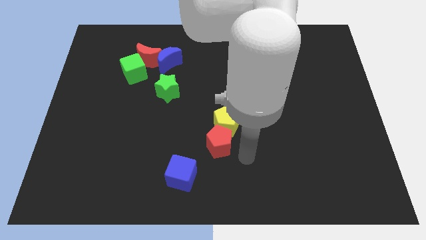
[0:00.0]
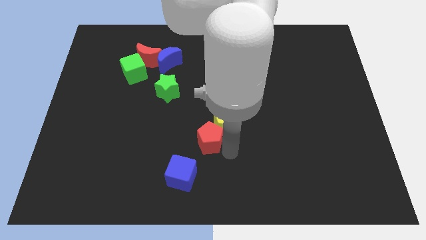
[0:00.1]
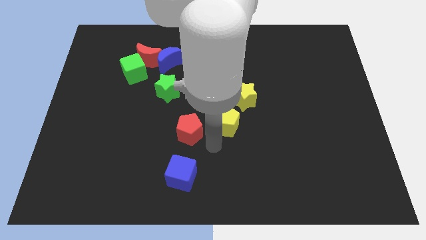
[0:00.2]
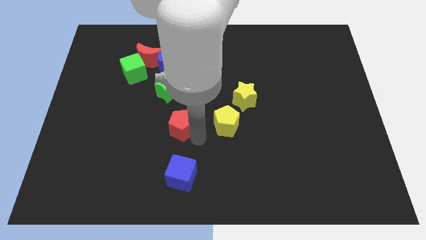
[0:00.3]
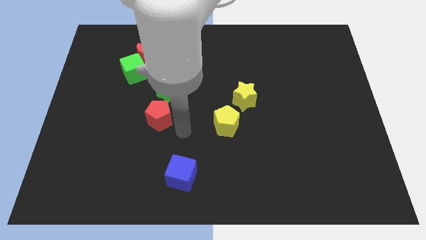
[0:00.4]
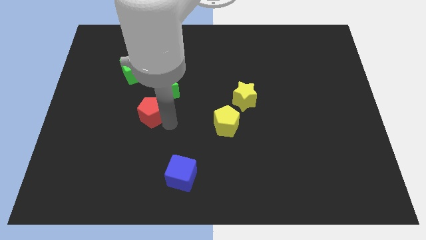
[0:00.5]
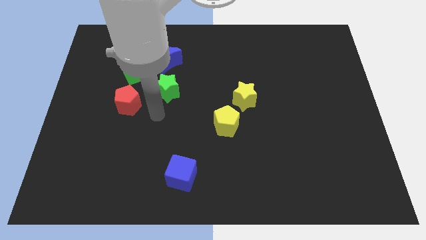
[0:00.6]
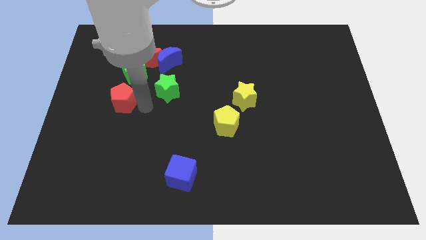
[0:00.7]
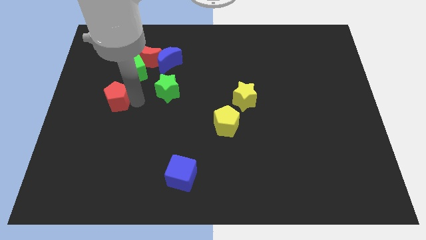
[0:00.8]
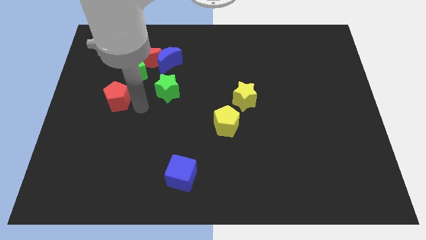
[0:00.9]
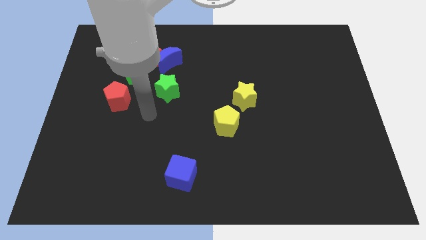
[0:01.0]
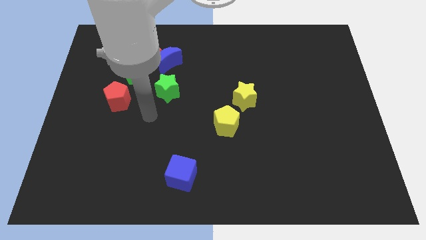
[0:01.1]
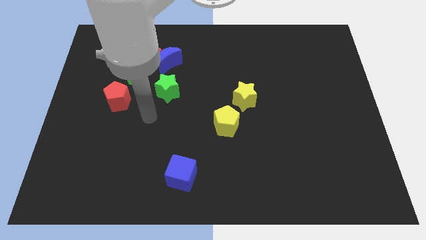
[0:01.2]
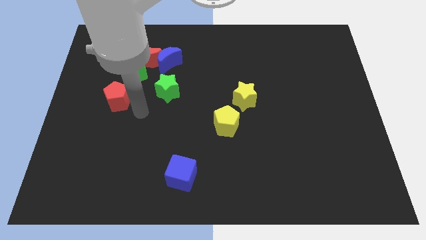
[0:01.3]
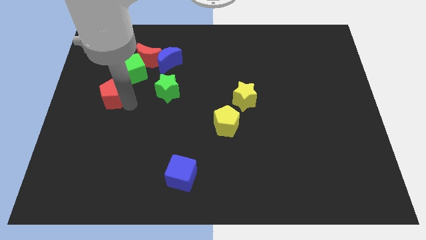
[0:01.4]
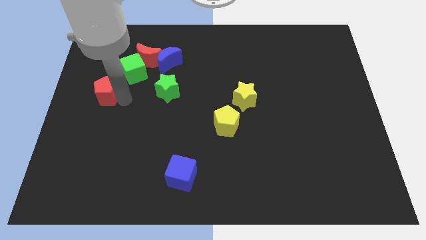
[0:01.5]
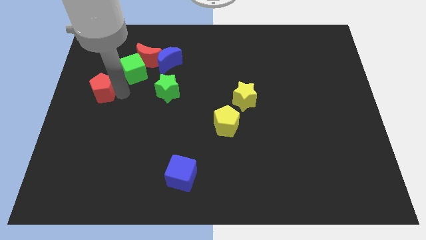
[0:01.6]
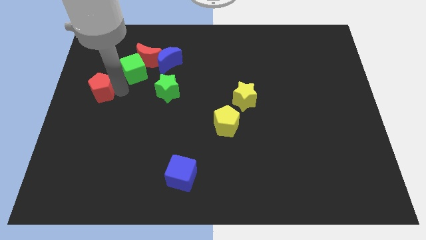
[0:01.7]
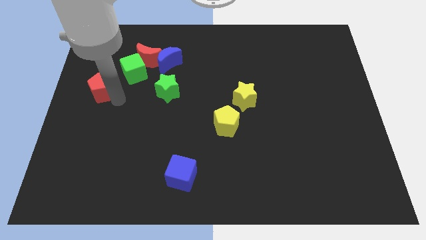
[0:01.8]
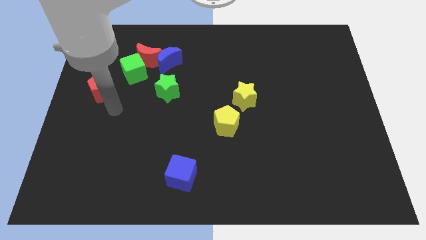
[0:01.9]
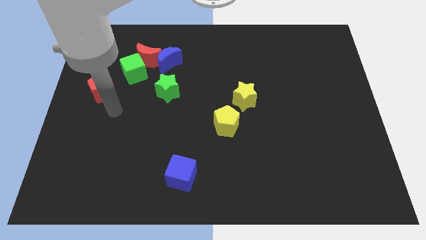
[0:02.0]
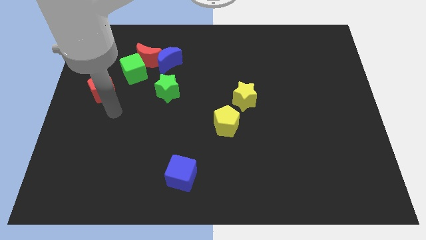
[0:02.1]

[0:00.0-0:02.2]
place red pentagon to the bottom left of the green cube

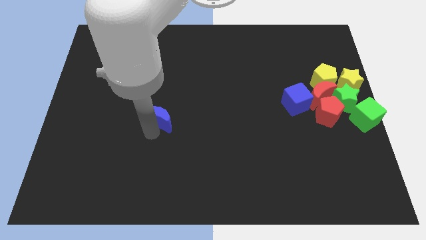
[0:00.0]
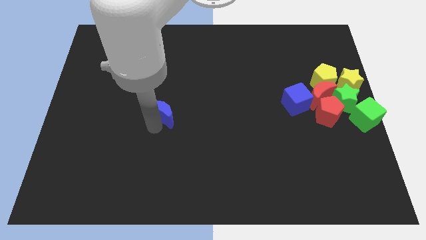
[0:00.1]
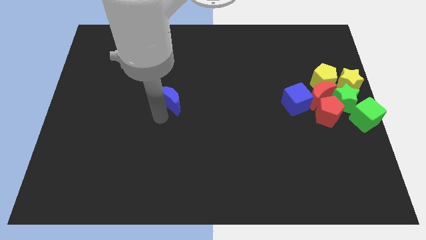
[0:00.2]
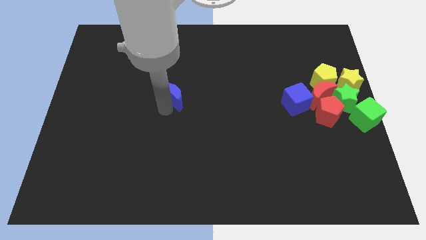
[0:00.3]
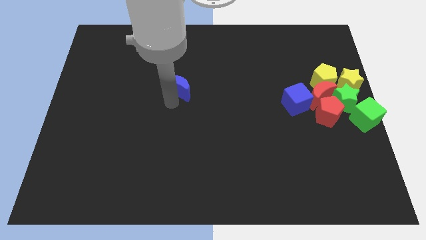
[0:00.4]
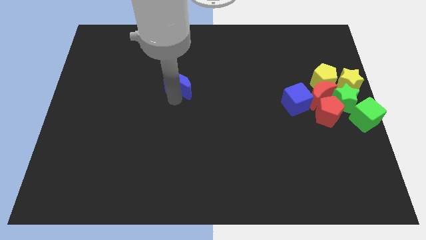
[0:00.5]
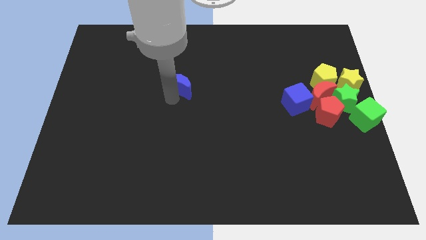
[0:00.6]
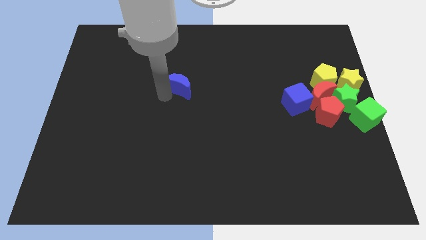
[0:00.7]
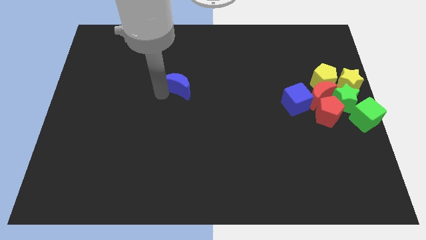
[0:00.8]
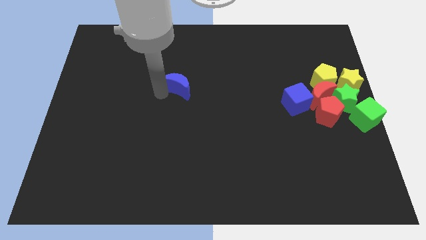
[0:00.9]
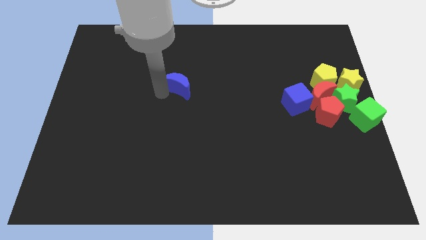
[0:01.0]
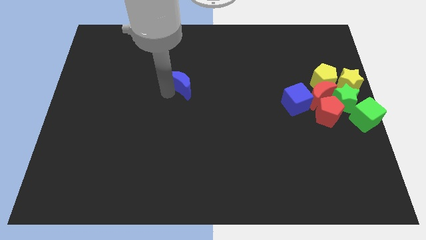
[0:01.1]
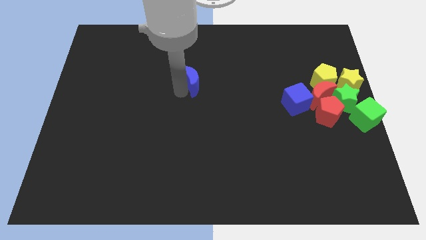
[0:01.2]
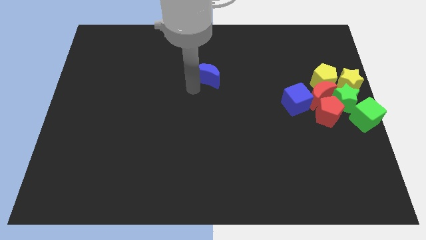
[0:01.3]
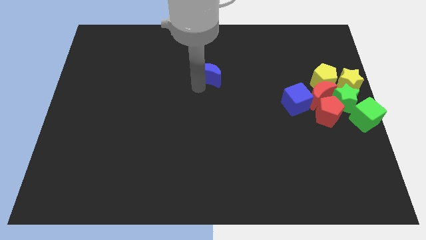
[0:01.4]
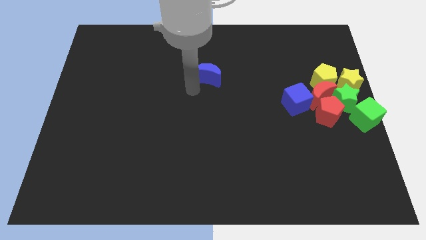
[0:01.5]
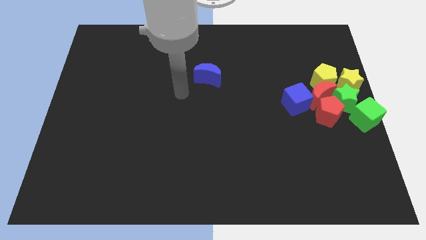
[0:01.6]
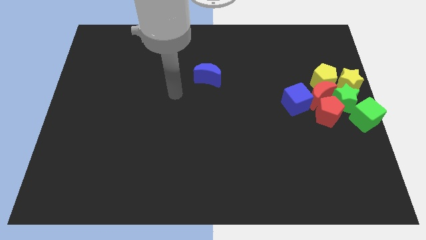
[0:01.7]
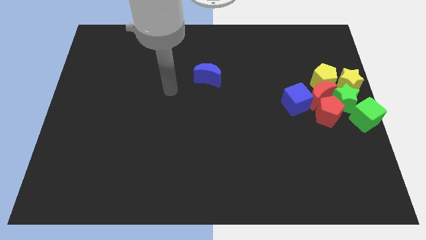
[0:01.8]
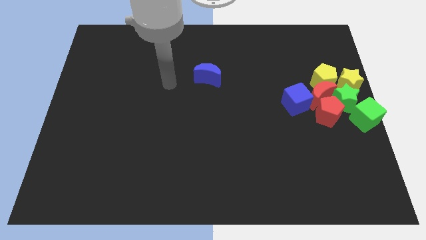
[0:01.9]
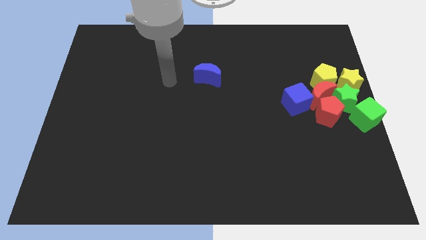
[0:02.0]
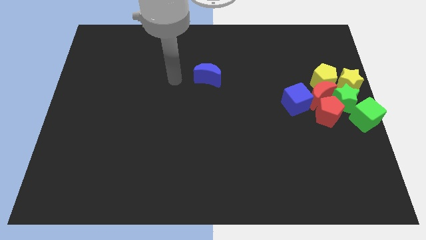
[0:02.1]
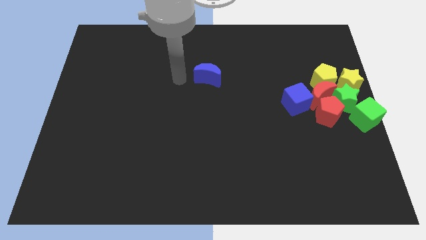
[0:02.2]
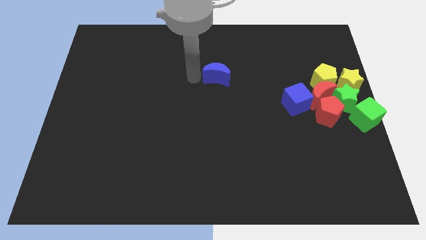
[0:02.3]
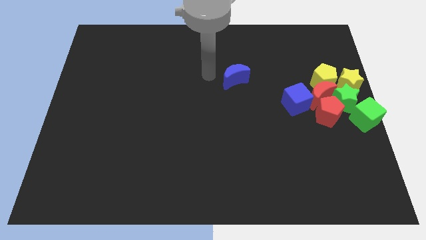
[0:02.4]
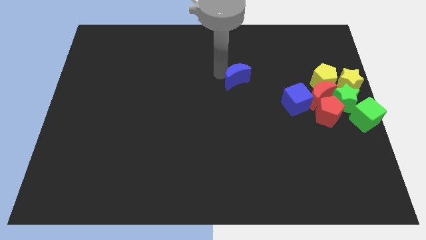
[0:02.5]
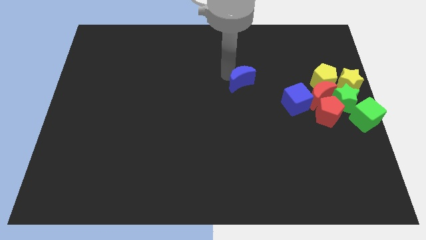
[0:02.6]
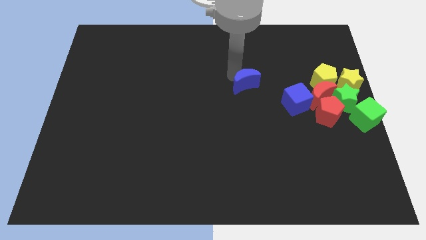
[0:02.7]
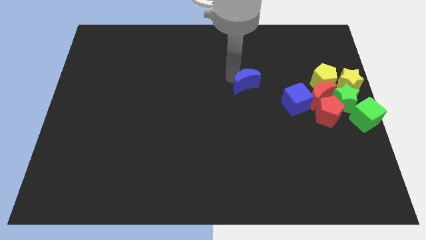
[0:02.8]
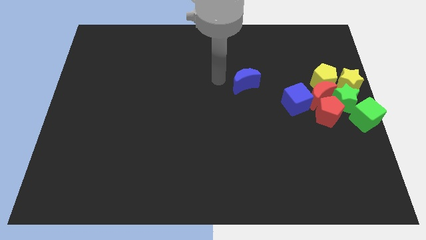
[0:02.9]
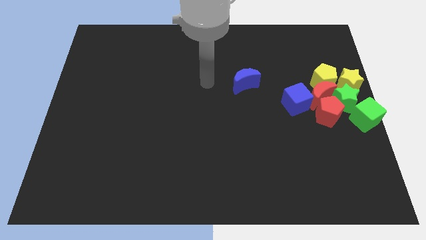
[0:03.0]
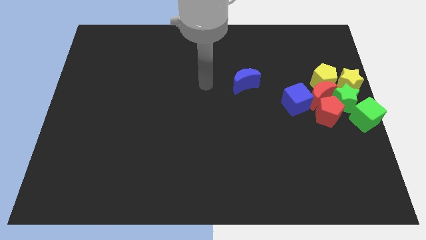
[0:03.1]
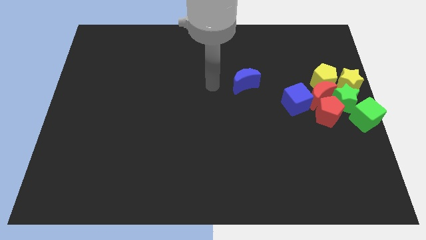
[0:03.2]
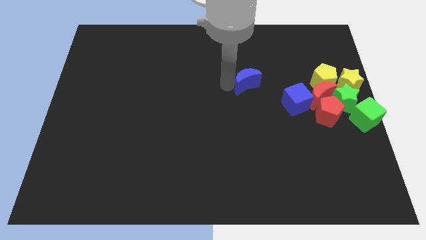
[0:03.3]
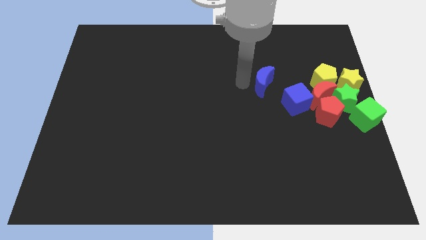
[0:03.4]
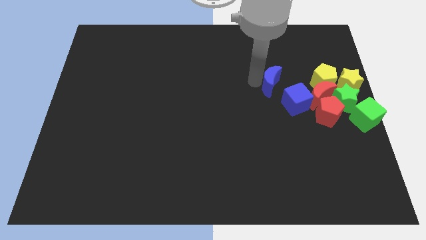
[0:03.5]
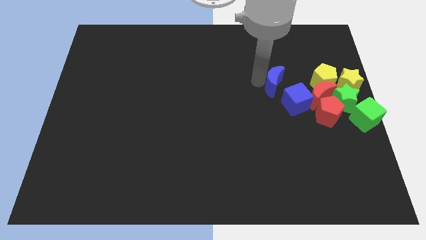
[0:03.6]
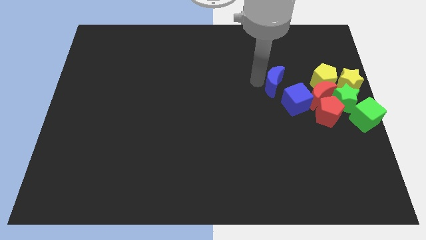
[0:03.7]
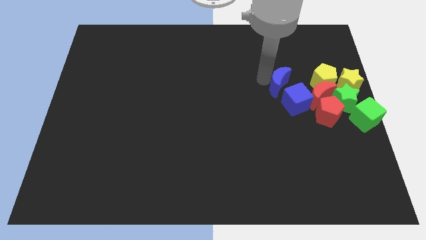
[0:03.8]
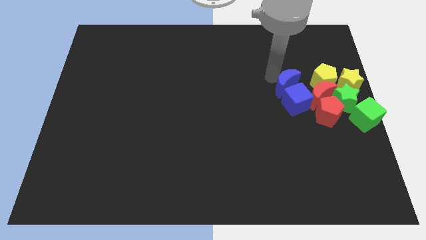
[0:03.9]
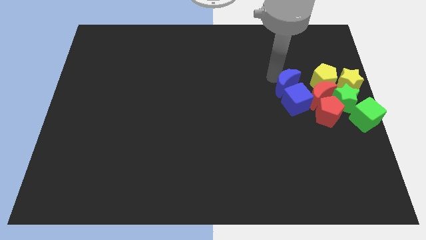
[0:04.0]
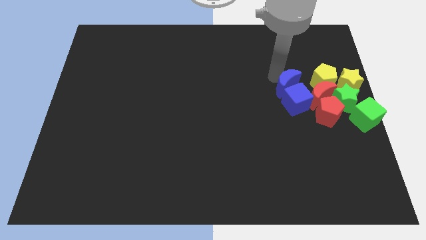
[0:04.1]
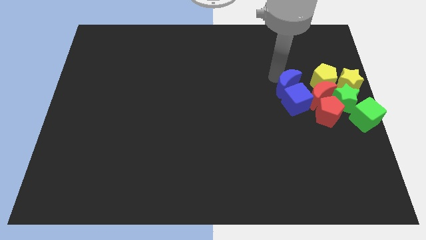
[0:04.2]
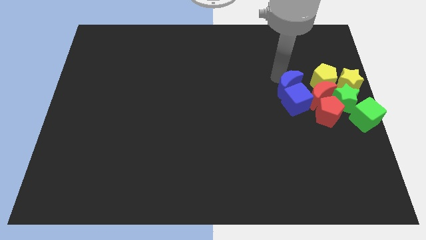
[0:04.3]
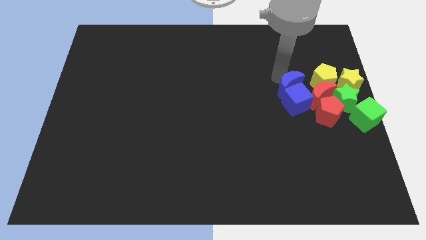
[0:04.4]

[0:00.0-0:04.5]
push the blue moon above to the blue cube

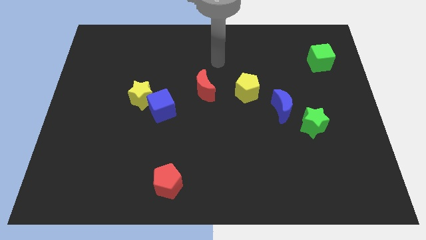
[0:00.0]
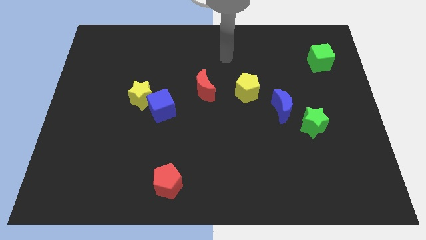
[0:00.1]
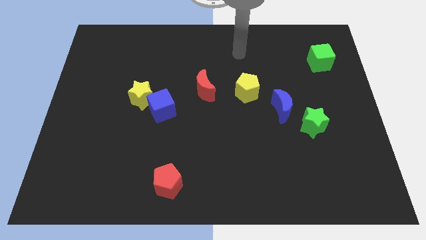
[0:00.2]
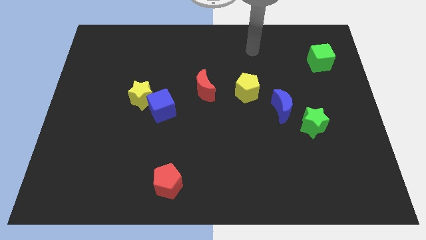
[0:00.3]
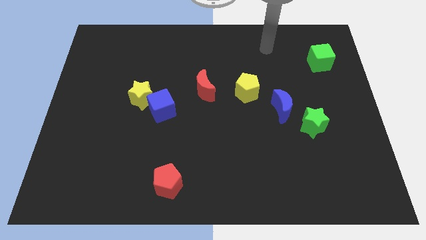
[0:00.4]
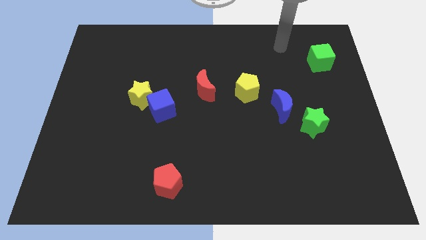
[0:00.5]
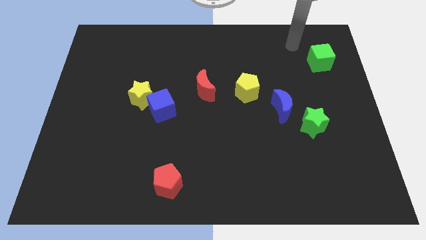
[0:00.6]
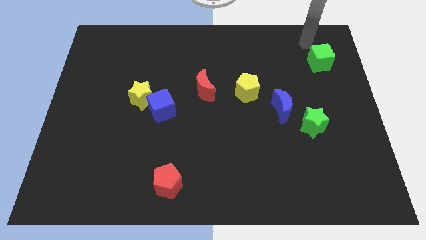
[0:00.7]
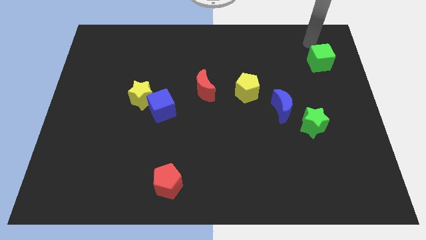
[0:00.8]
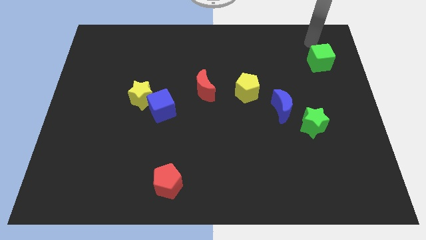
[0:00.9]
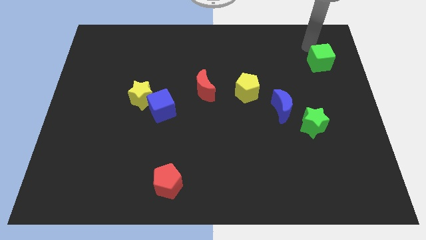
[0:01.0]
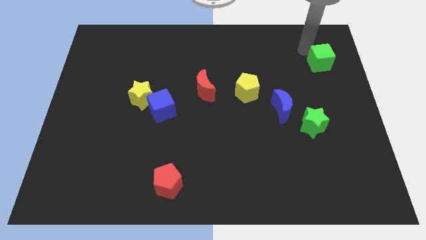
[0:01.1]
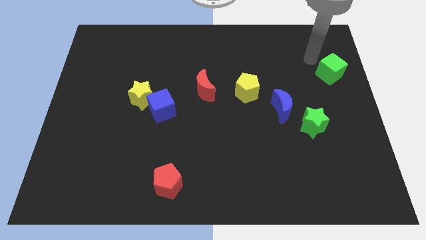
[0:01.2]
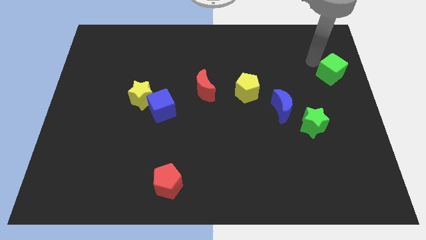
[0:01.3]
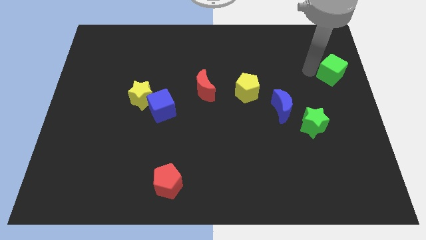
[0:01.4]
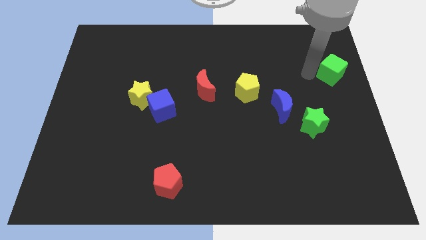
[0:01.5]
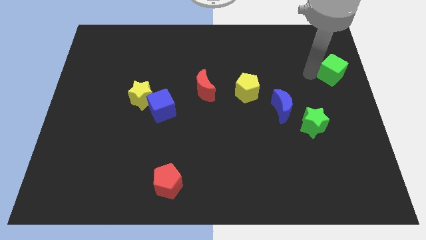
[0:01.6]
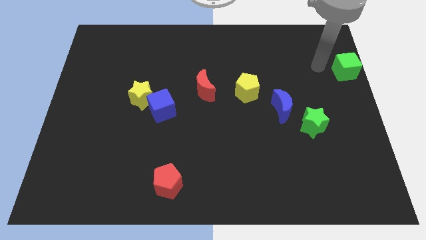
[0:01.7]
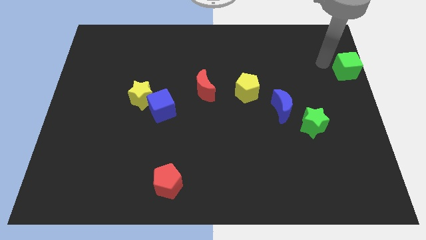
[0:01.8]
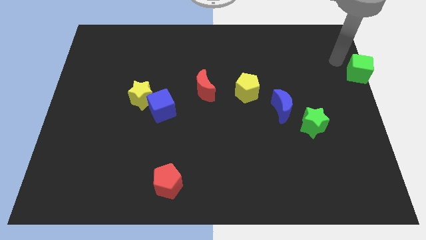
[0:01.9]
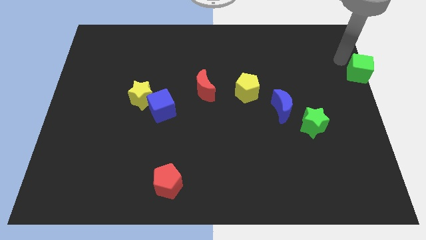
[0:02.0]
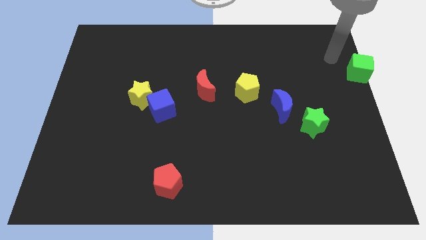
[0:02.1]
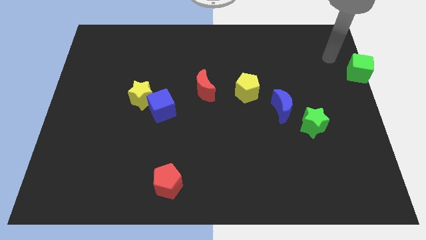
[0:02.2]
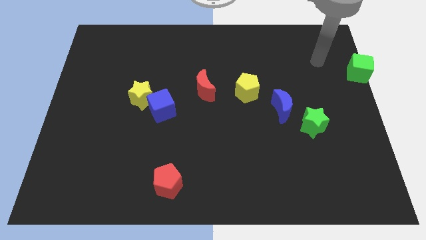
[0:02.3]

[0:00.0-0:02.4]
move the green cube towards the right side of the board
